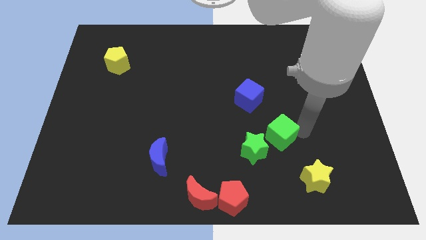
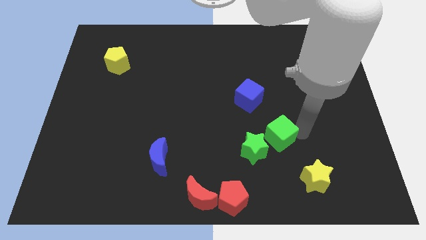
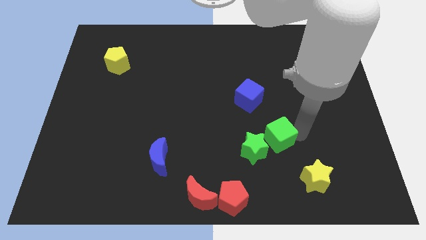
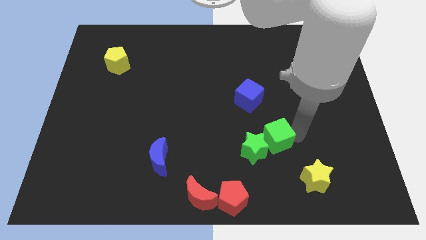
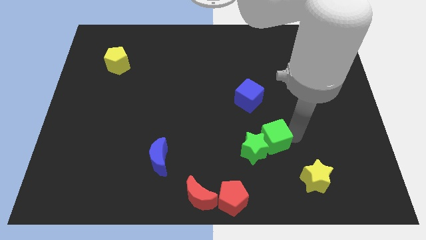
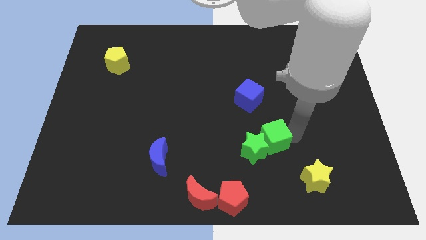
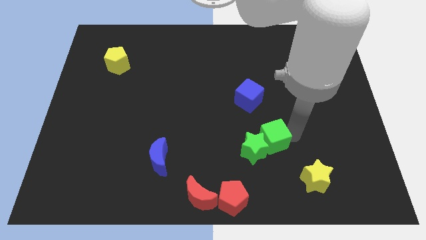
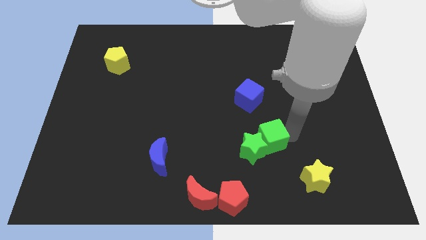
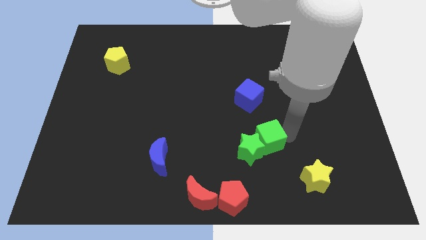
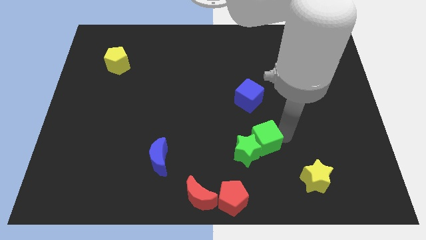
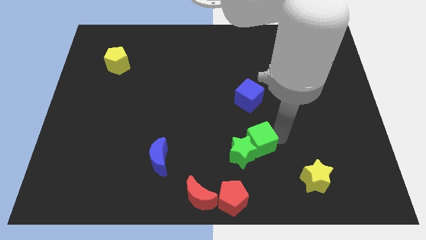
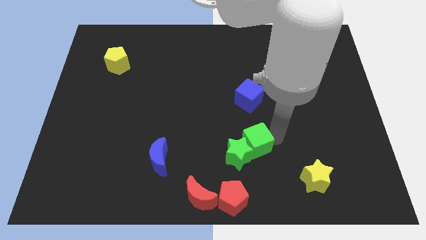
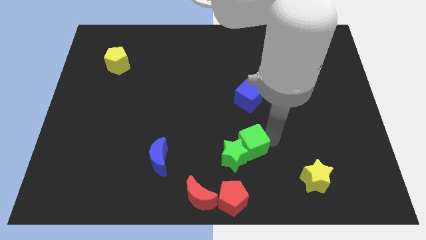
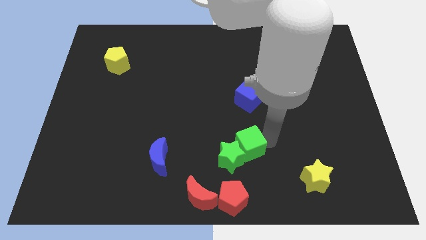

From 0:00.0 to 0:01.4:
push the green cube to the right of the green star

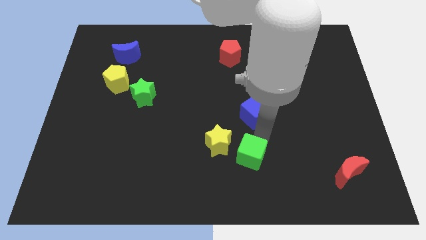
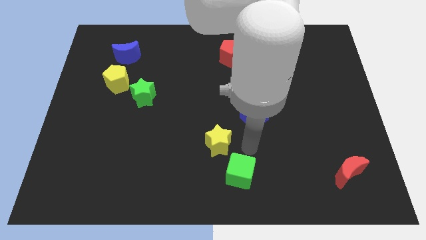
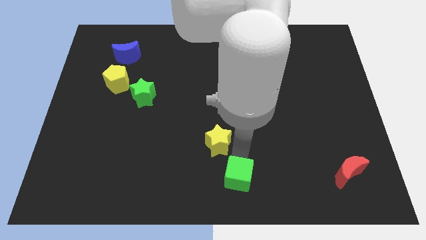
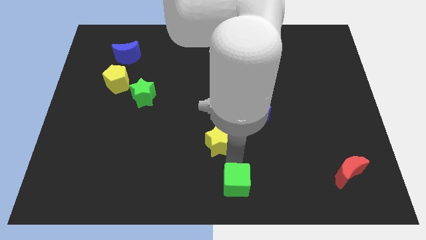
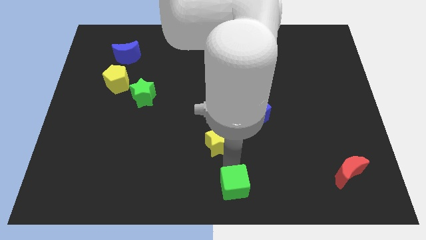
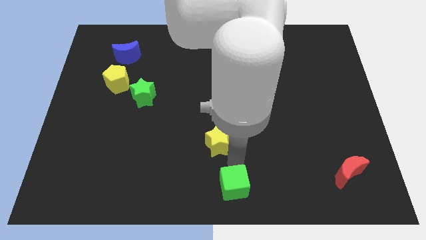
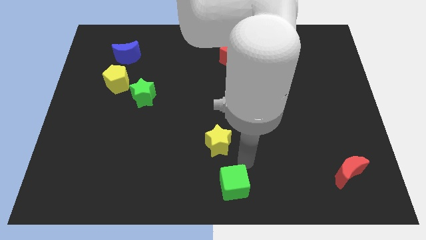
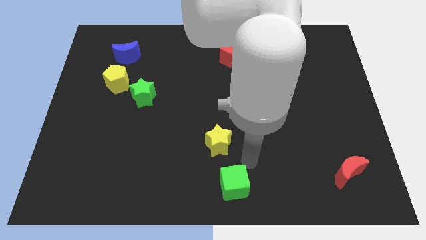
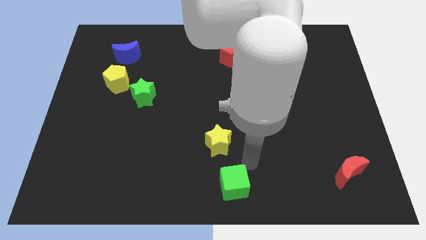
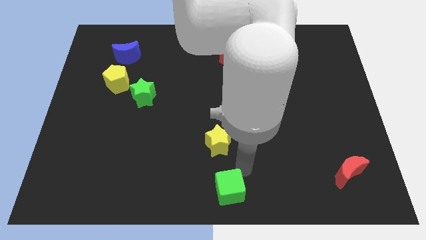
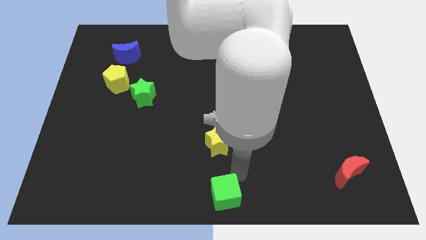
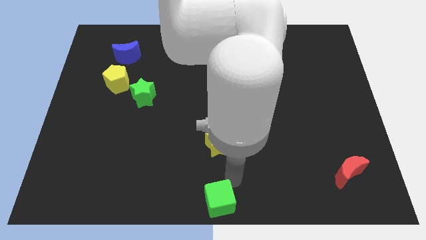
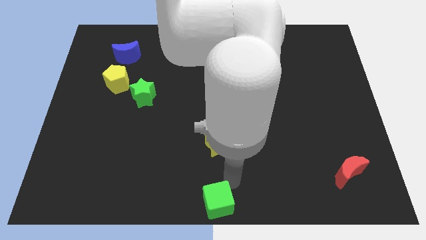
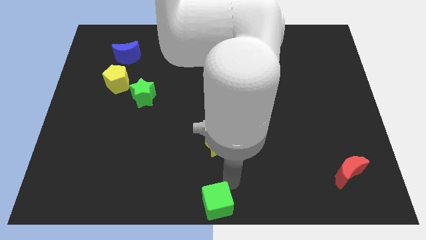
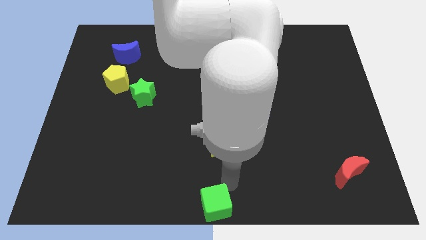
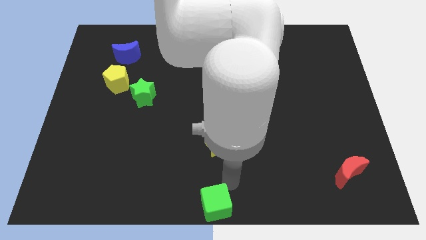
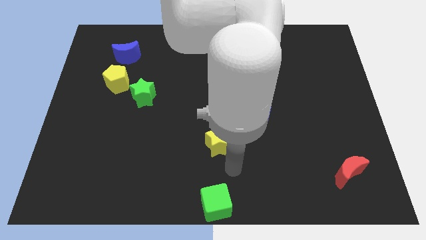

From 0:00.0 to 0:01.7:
place the green cube vertically below the yellow star

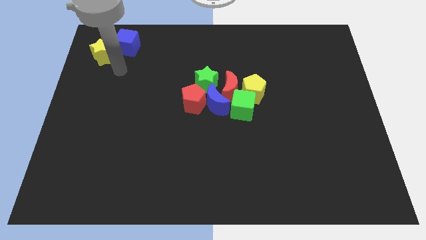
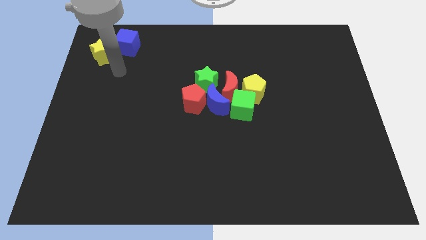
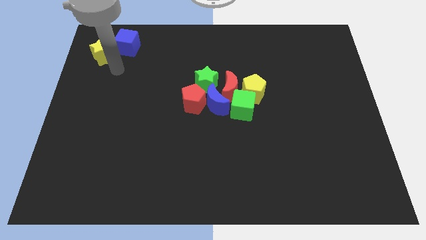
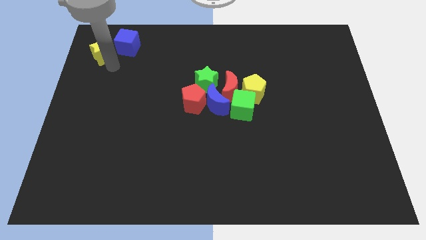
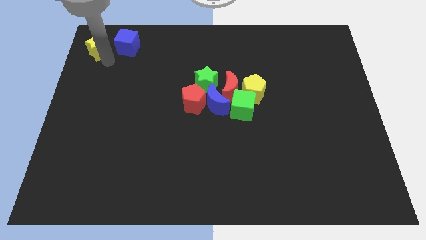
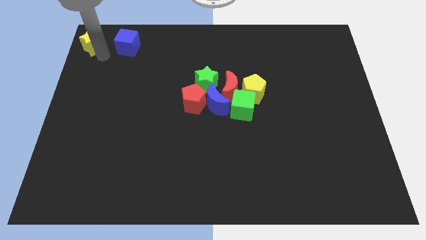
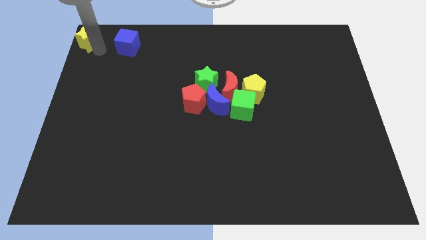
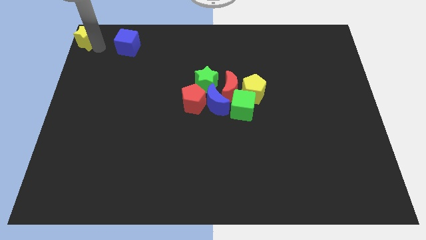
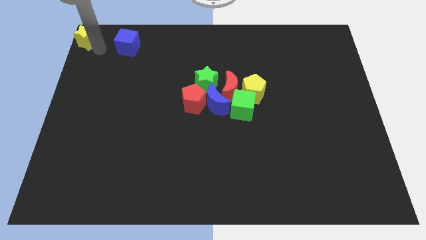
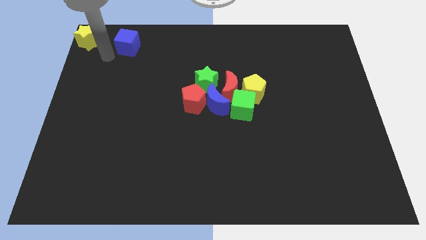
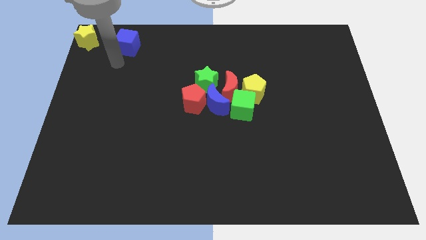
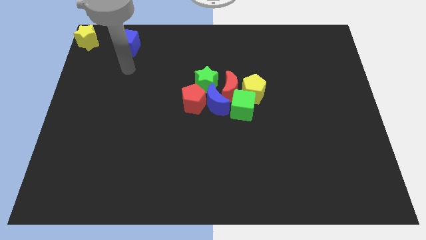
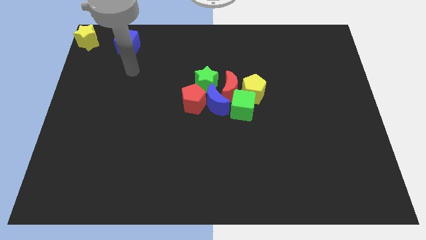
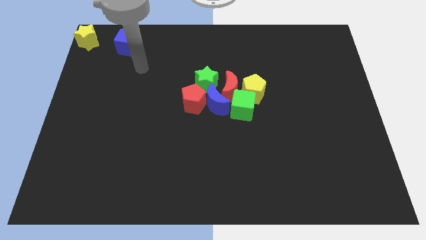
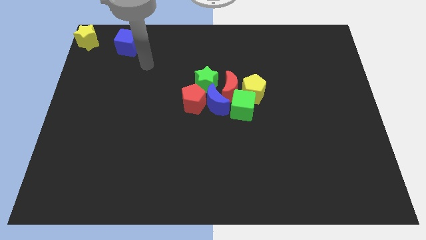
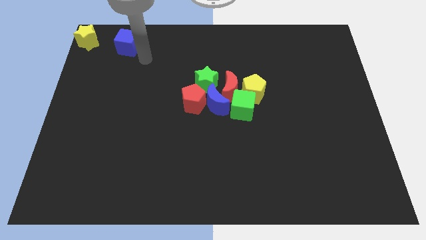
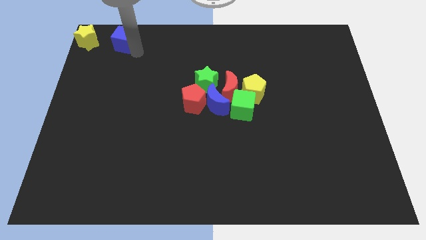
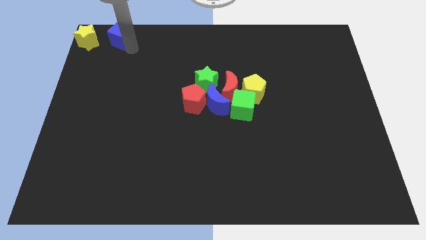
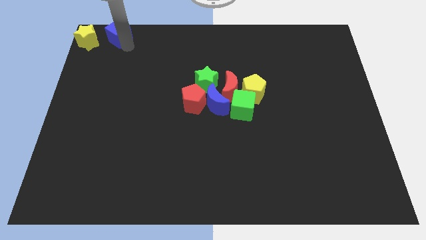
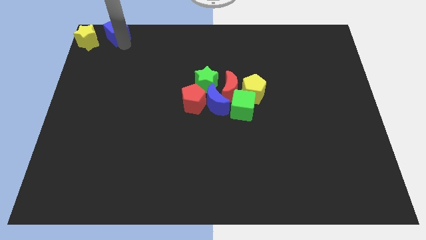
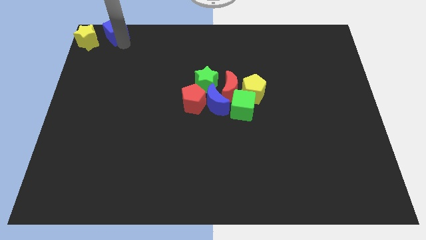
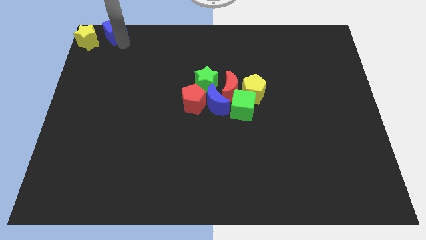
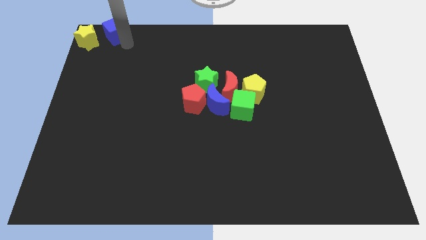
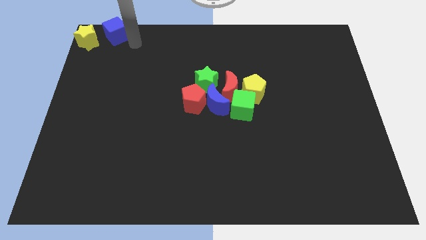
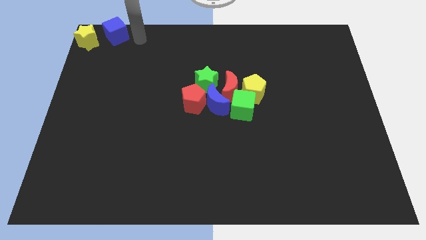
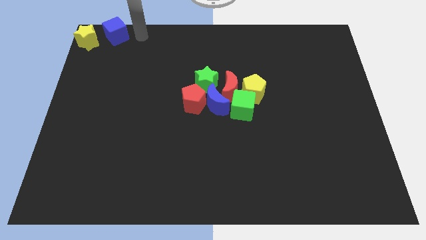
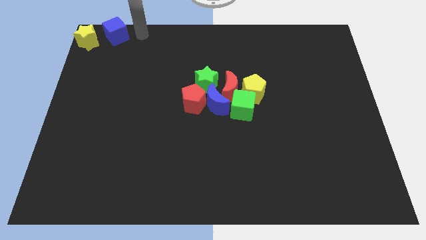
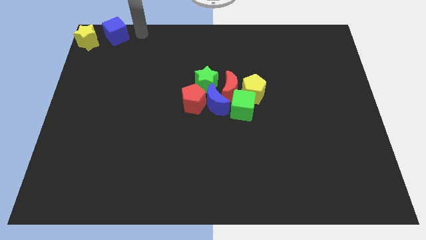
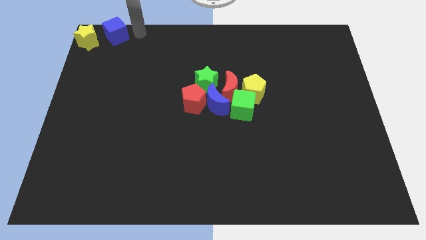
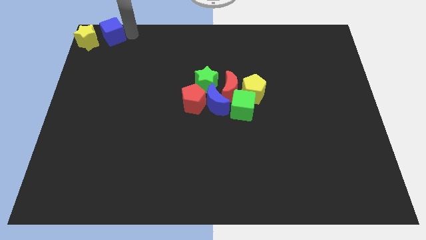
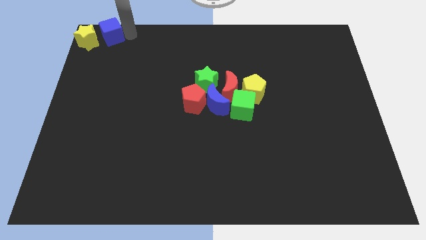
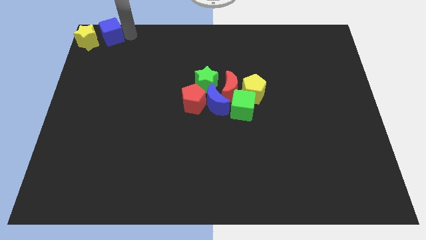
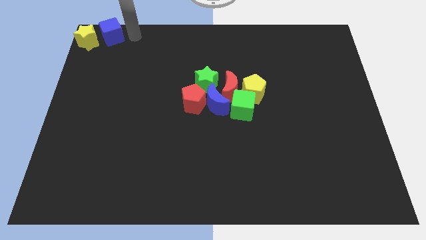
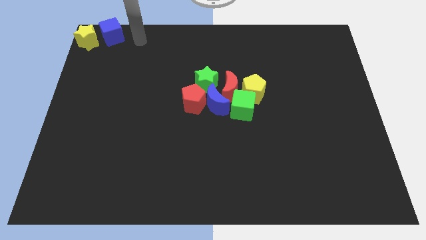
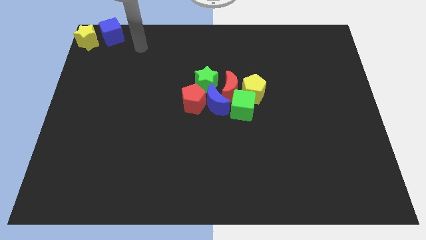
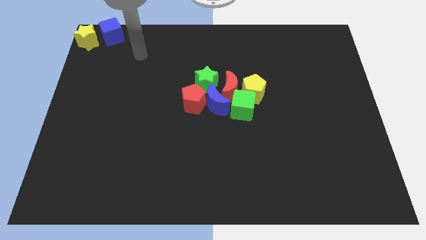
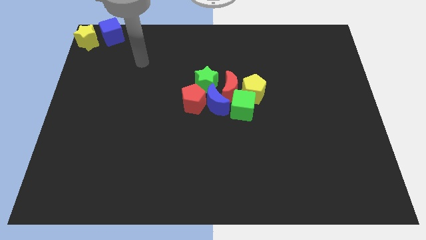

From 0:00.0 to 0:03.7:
move the yellow star to the left top corner along with the blue cube

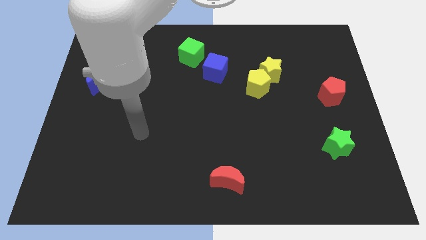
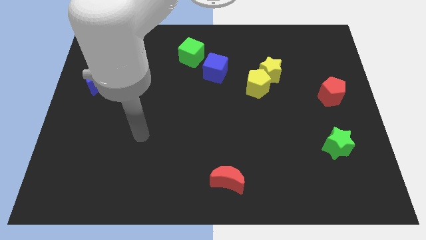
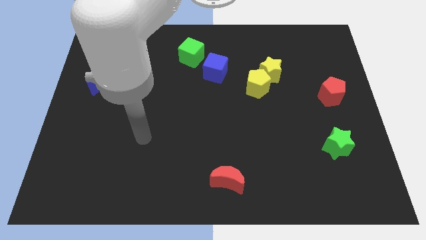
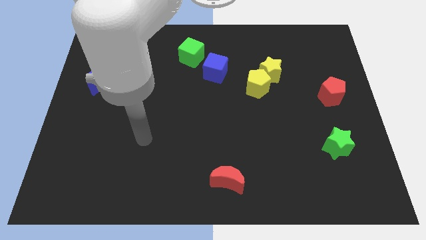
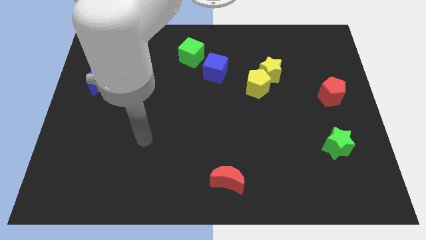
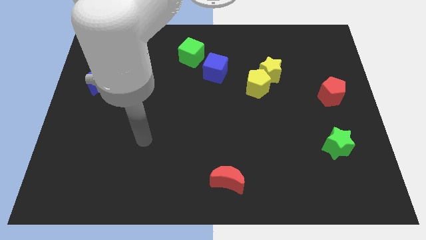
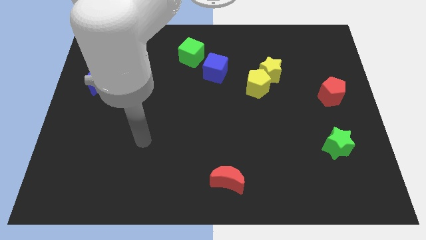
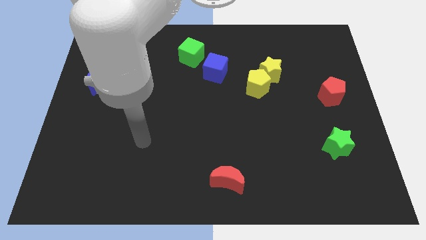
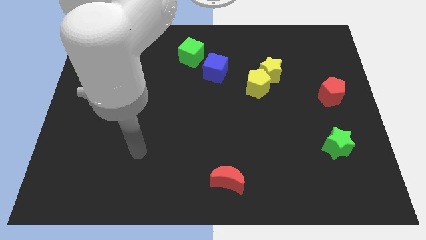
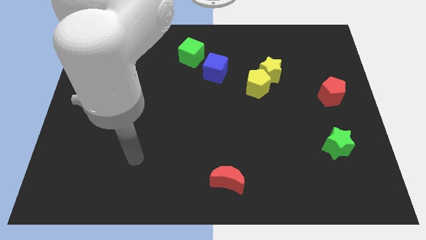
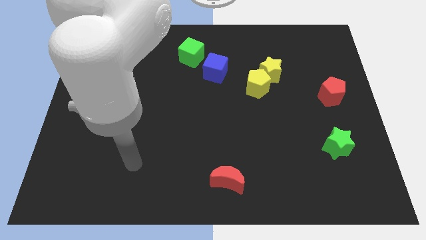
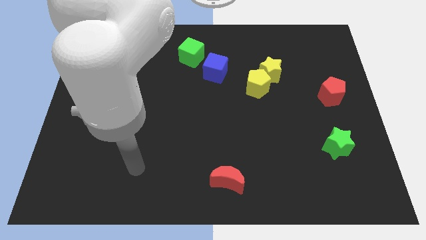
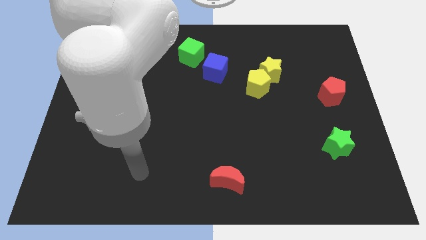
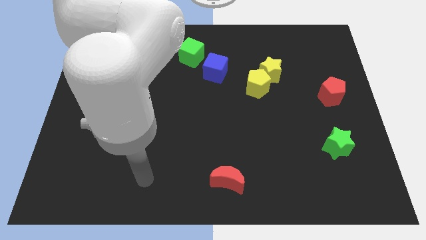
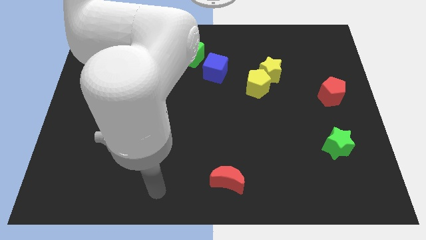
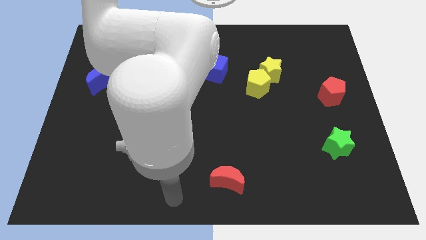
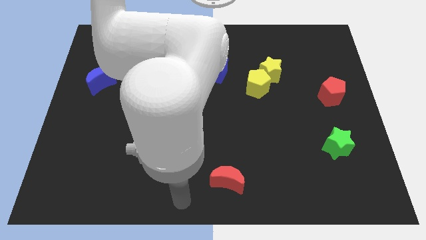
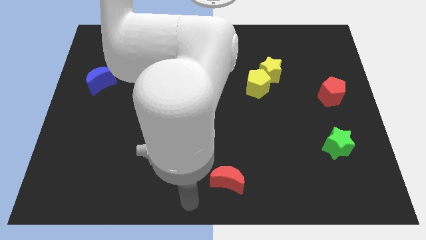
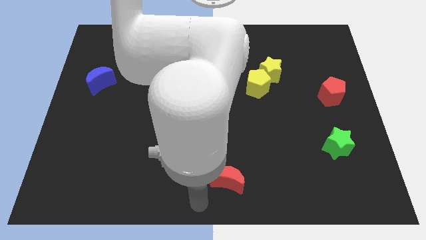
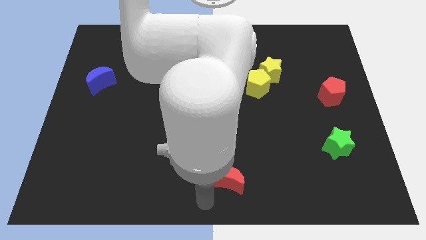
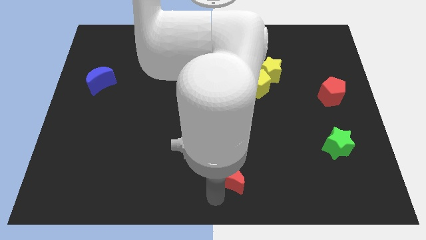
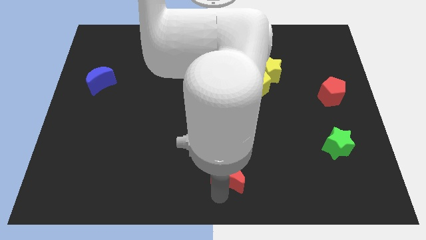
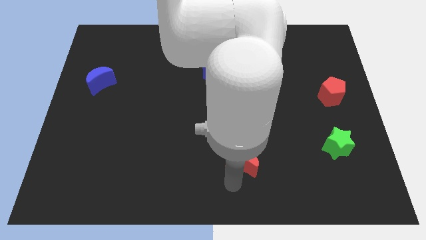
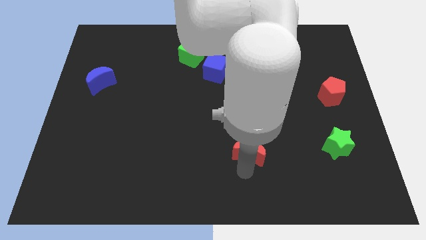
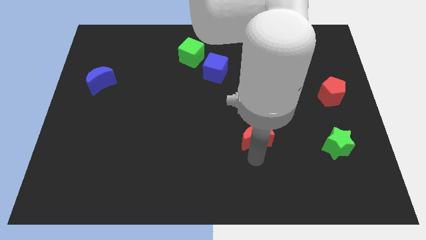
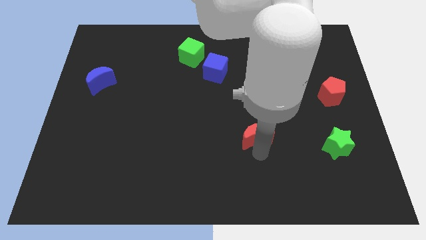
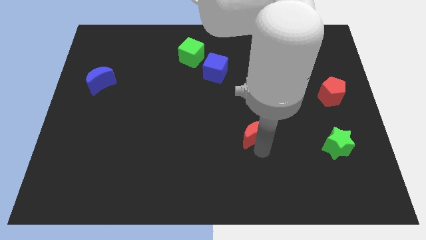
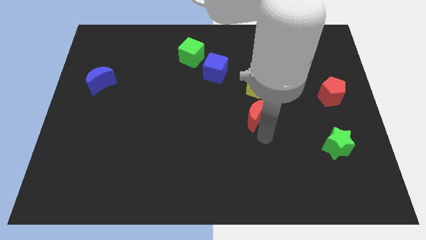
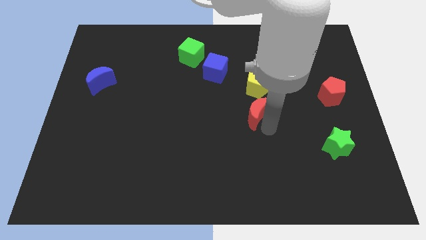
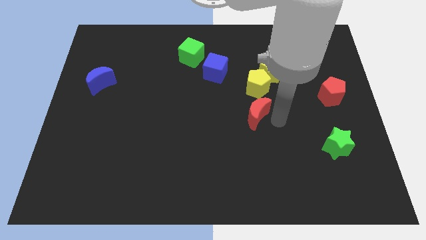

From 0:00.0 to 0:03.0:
push red crescent towards yellow pentagon
